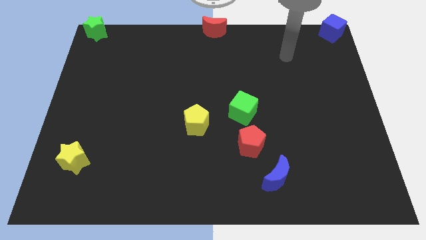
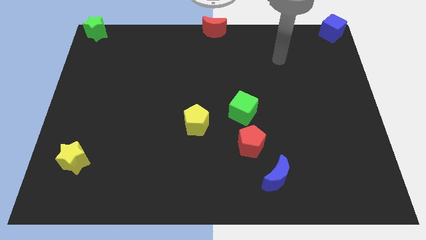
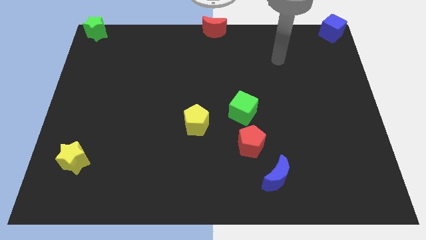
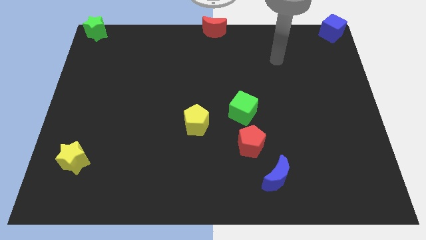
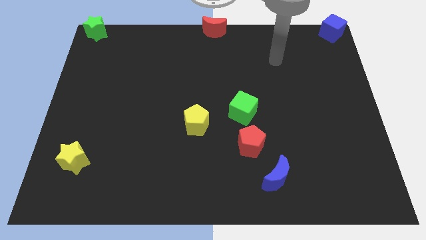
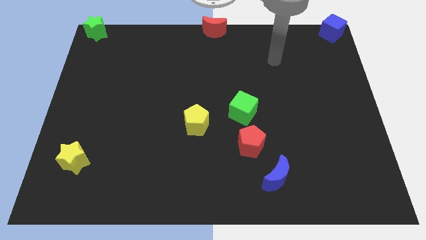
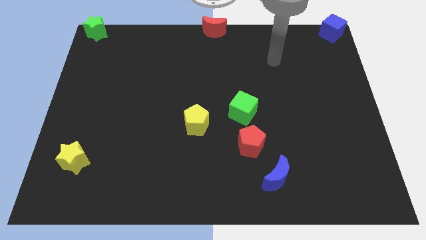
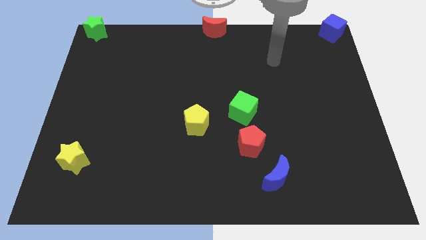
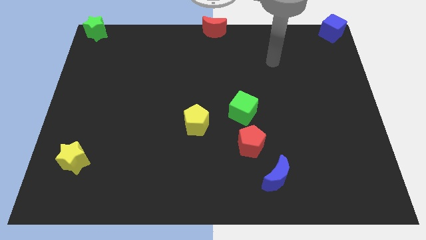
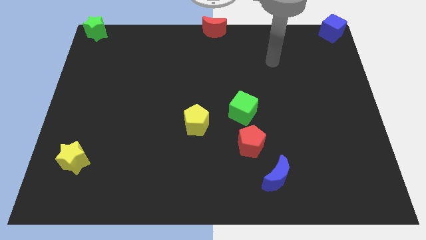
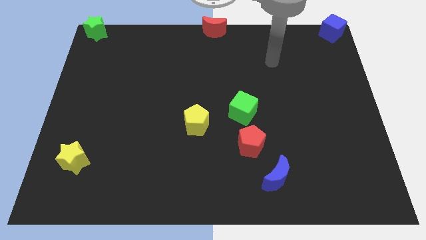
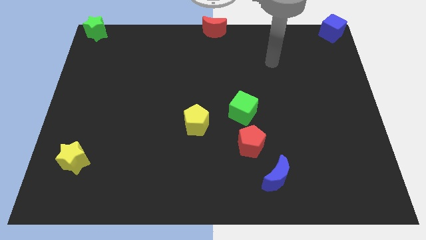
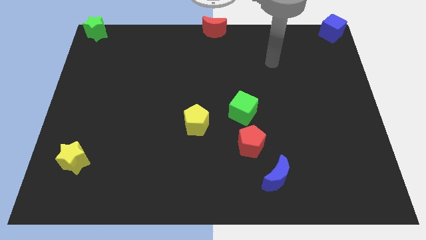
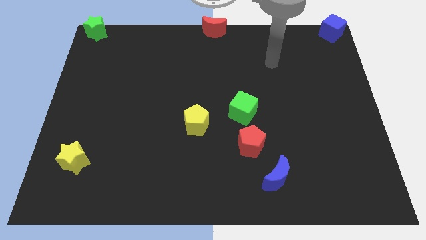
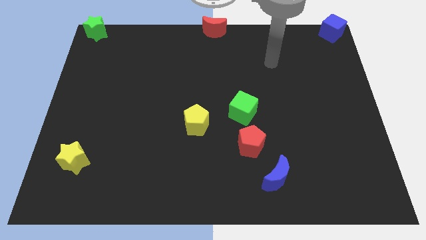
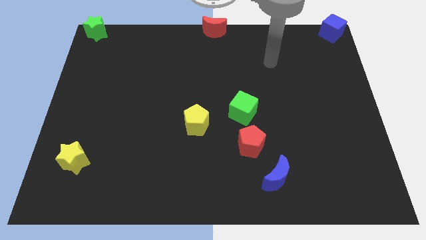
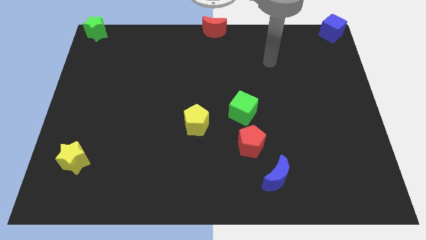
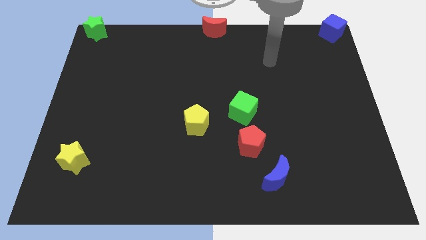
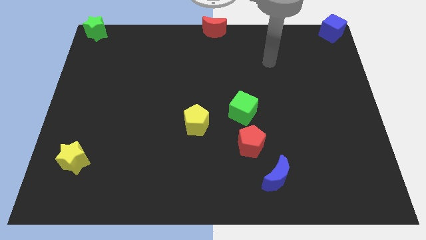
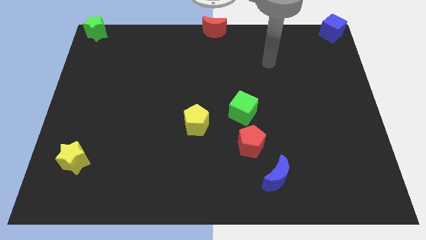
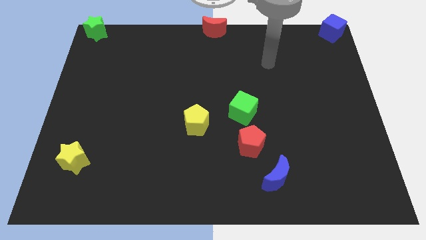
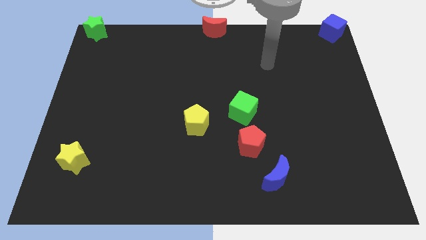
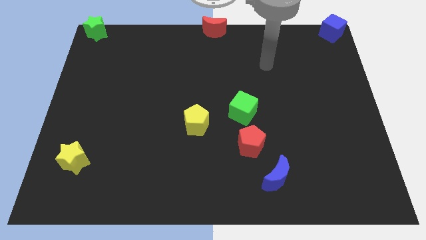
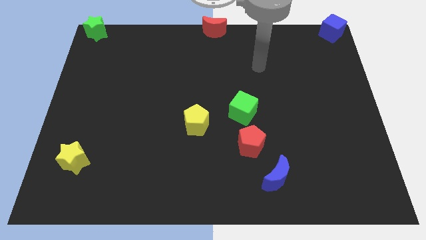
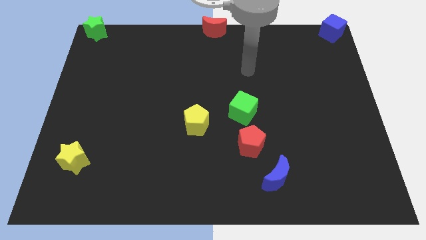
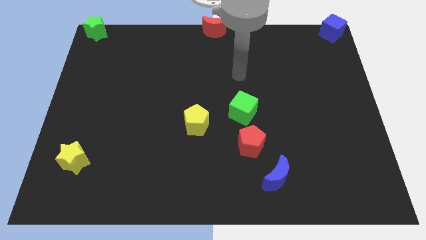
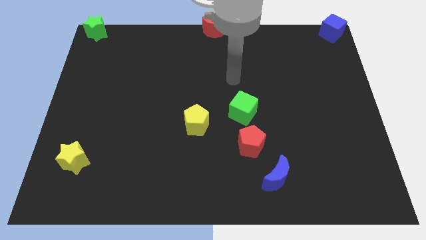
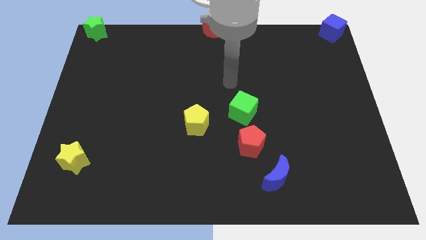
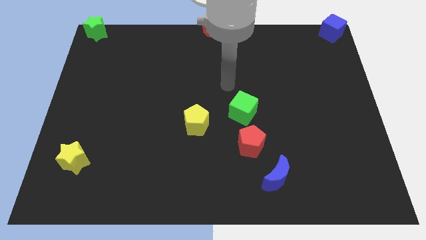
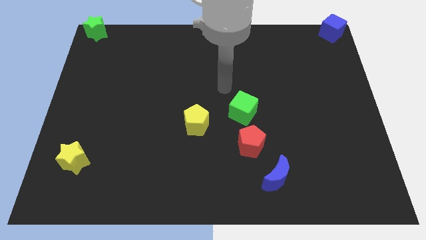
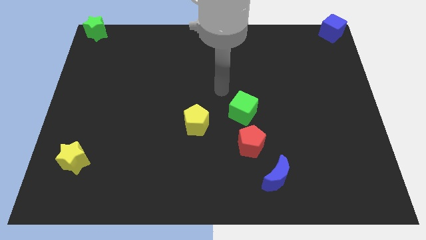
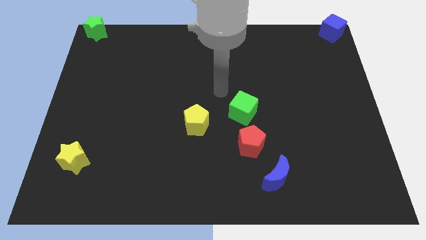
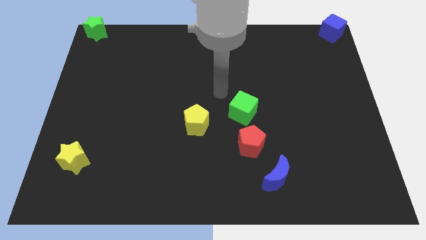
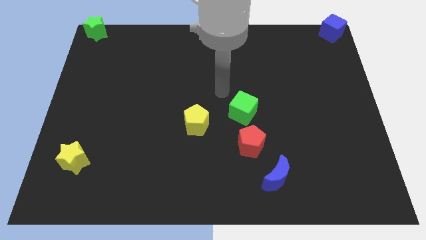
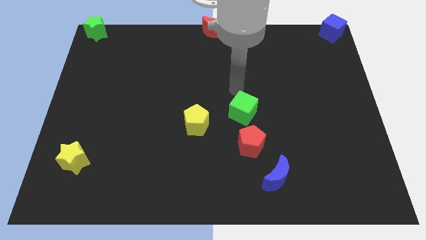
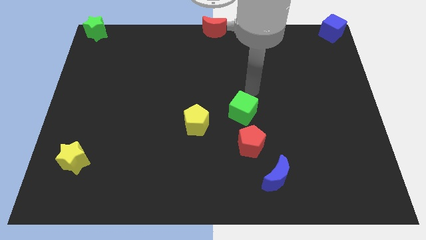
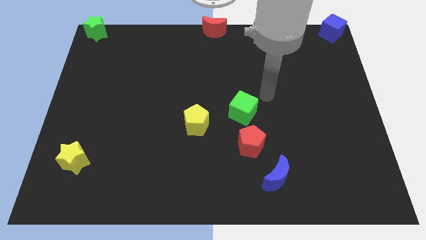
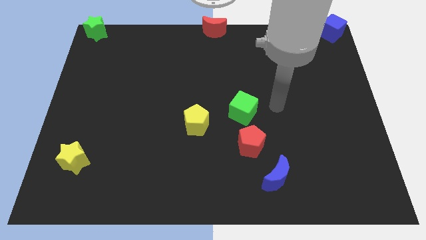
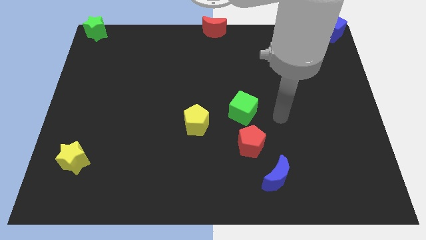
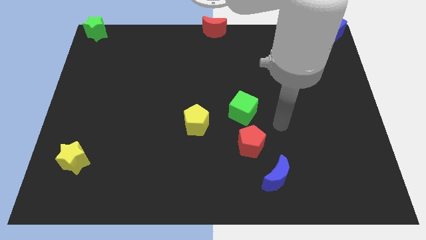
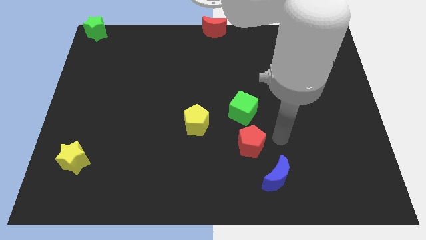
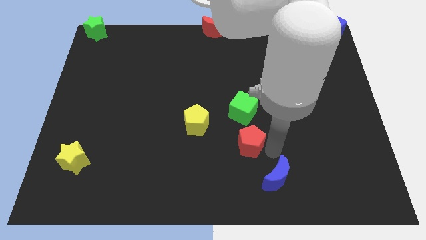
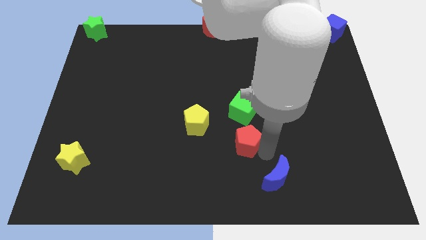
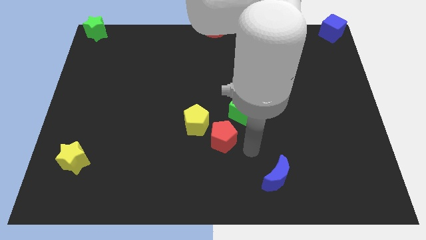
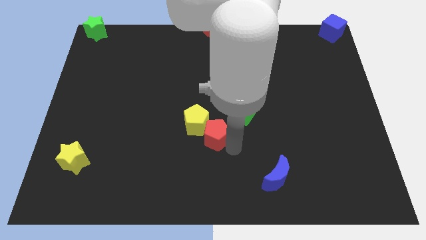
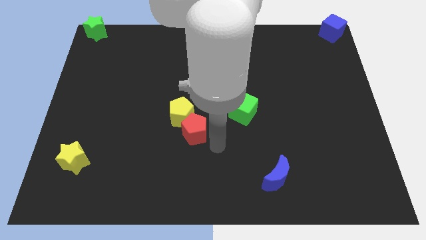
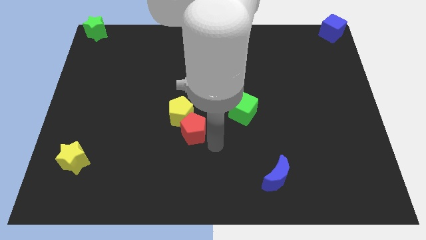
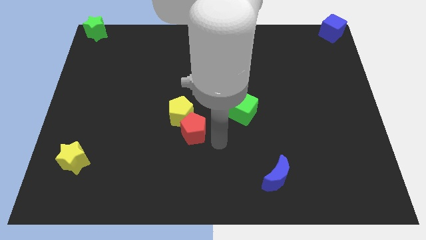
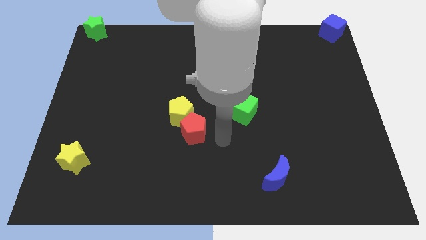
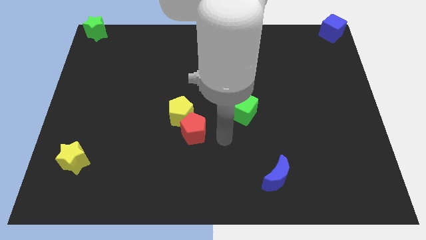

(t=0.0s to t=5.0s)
push the red pentagon into the yellow pentagon

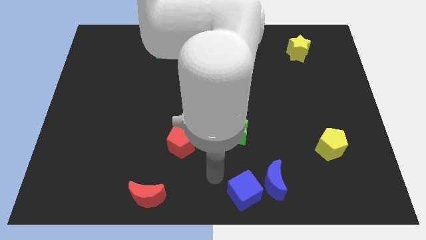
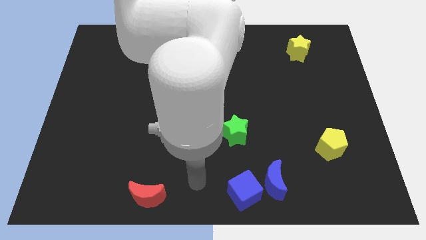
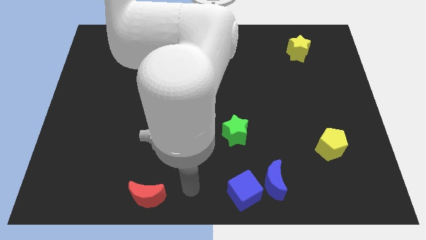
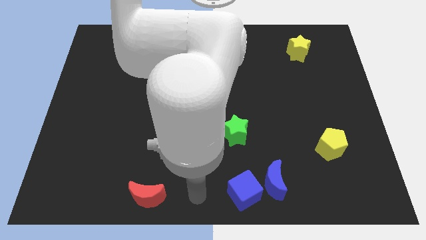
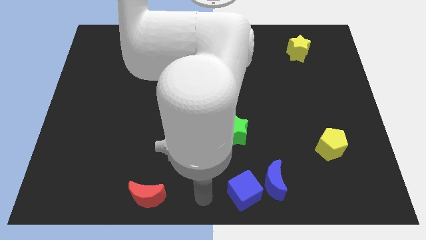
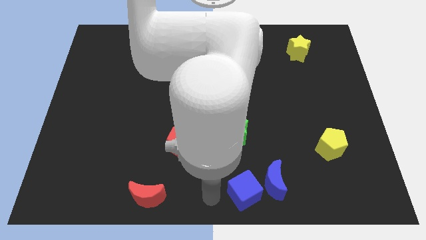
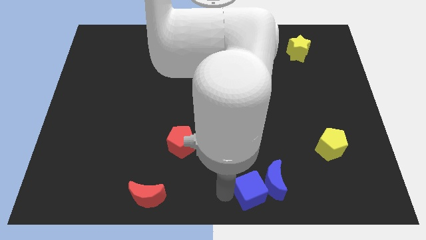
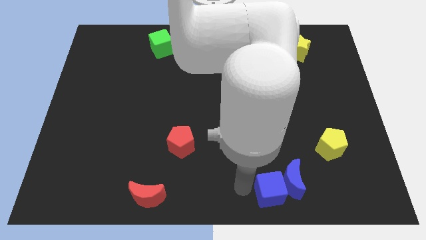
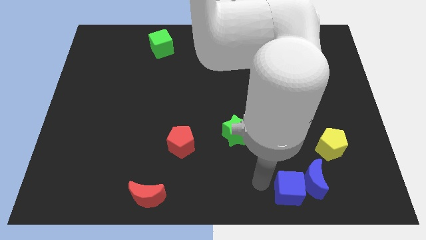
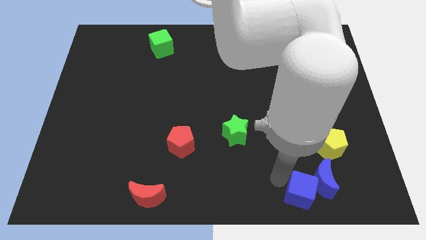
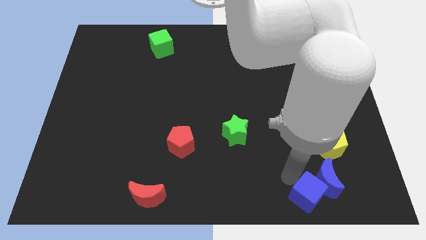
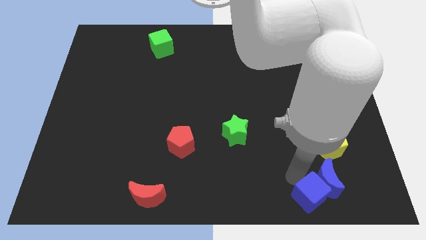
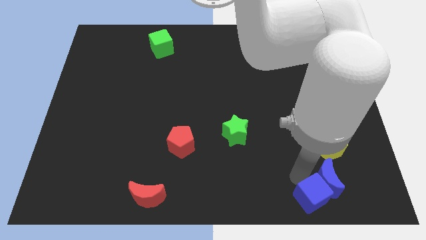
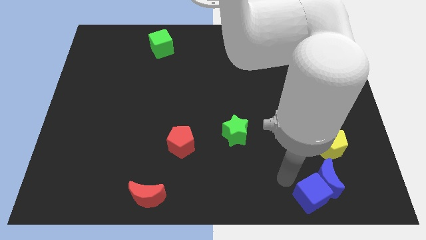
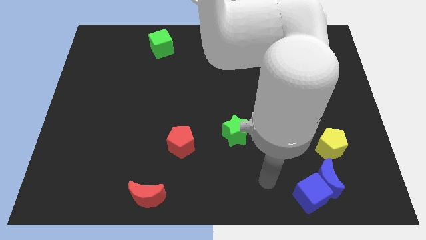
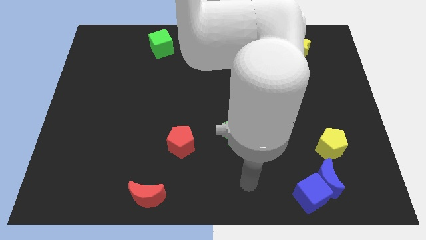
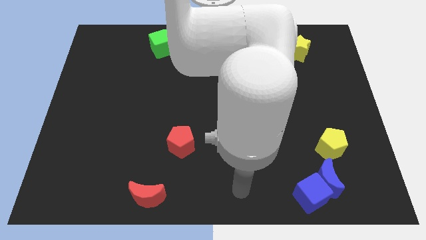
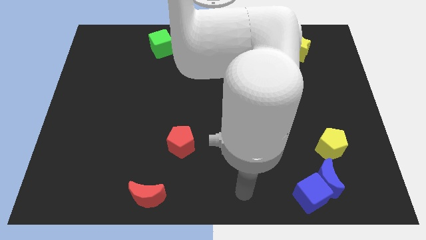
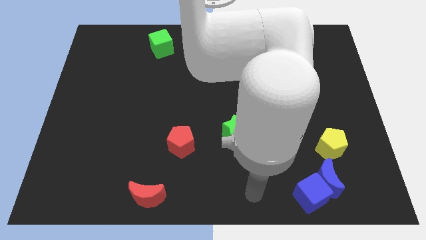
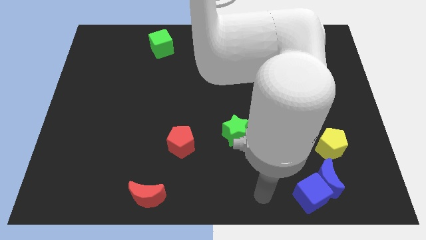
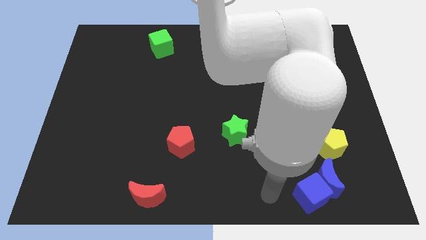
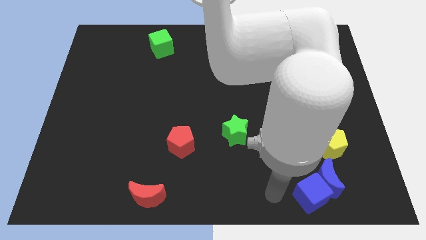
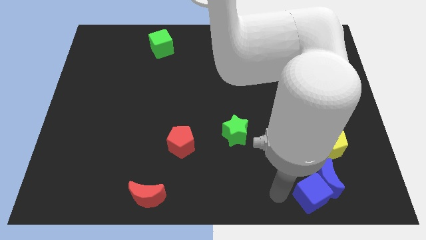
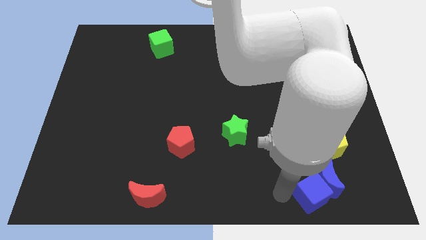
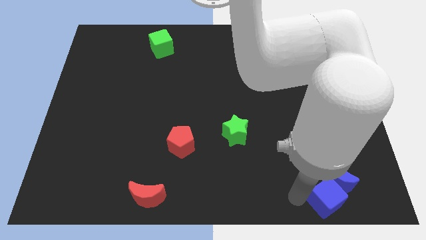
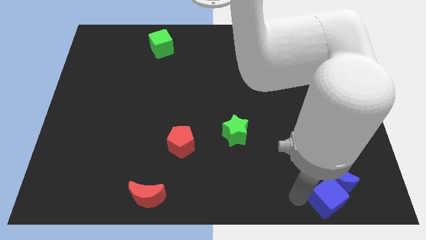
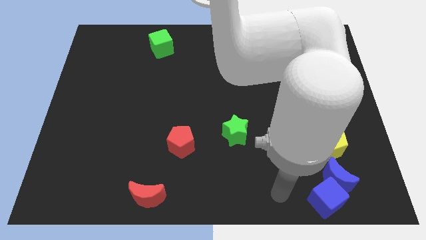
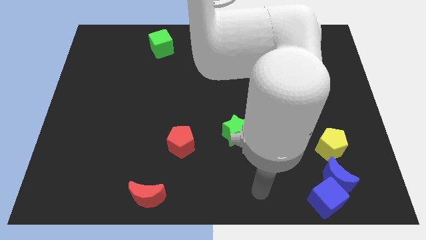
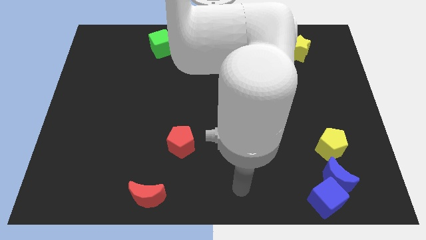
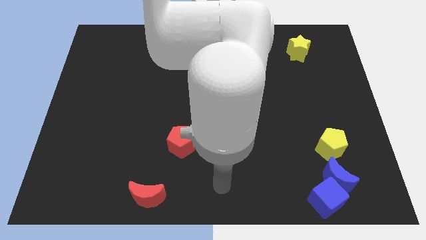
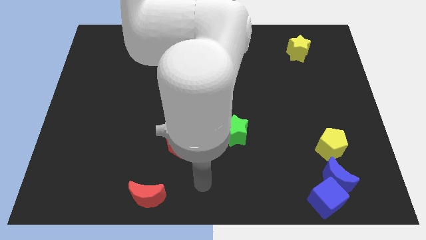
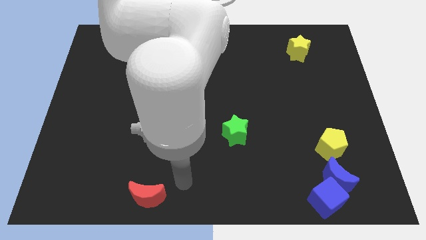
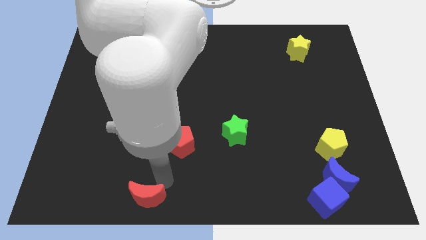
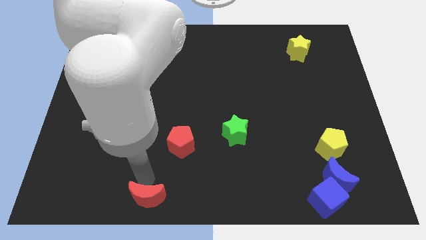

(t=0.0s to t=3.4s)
push blue cube into the blue moon

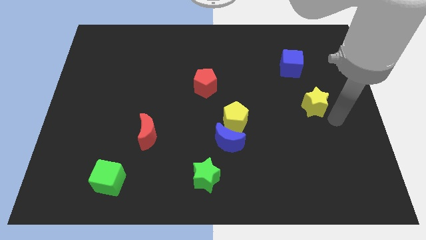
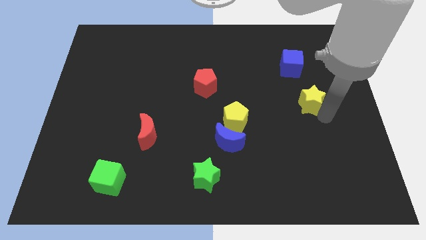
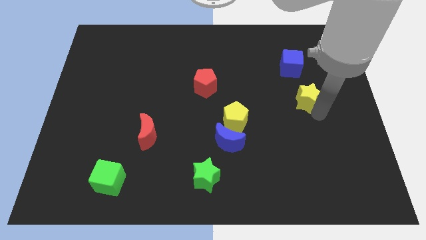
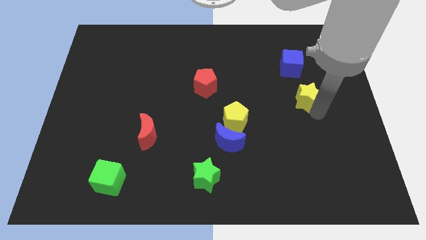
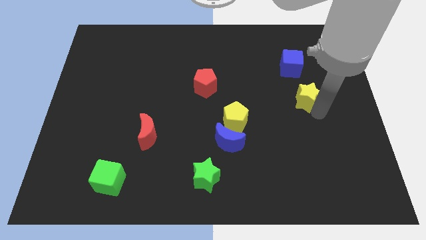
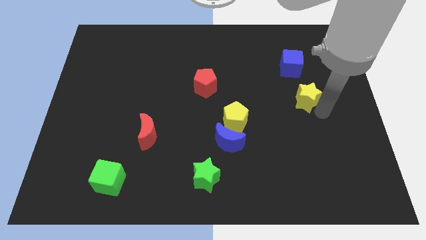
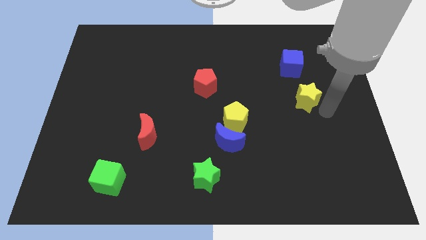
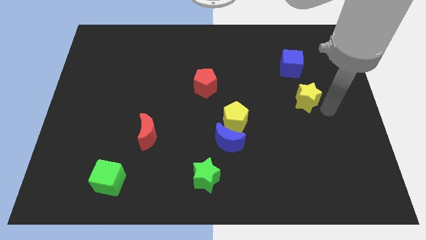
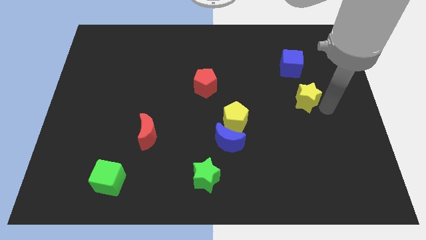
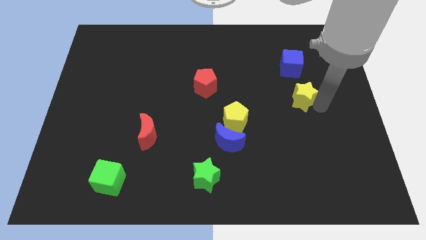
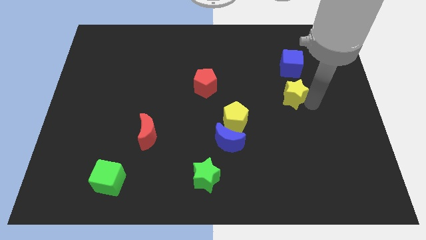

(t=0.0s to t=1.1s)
put yellow star below blue cube
